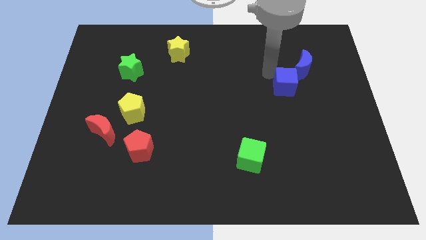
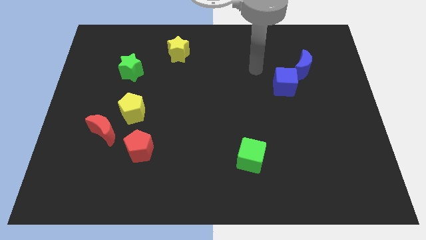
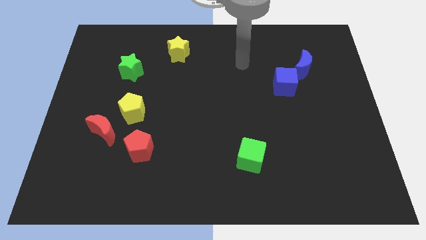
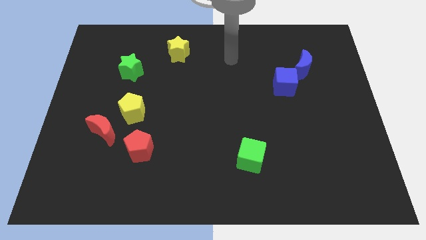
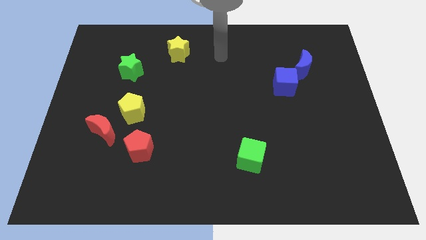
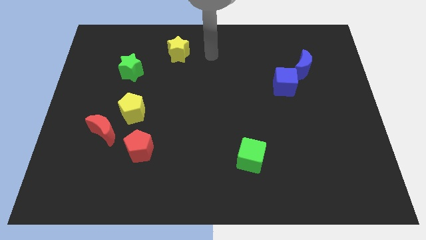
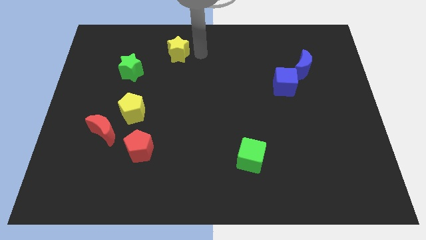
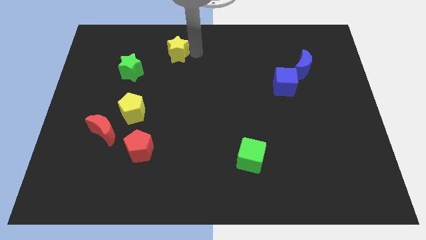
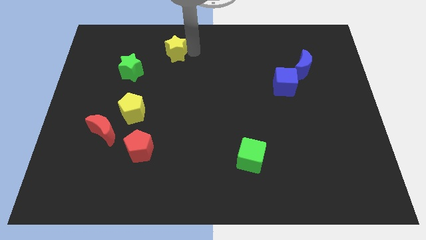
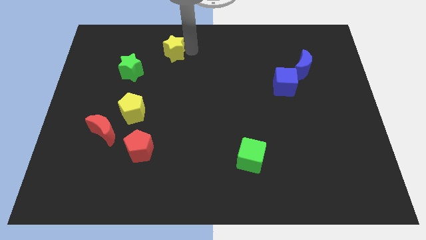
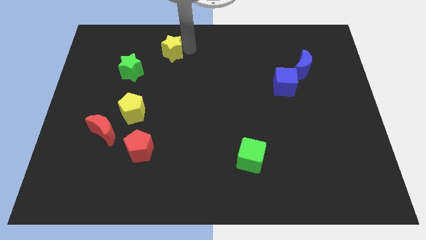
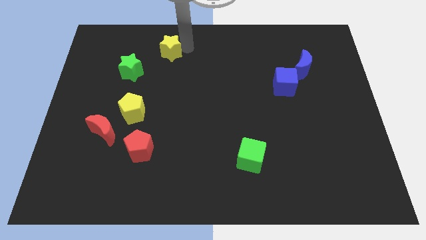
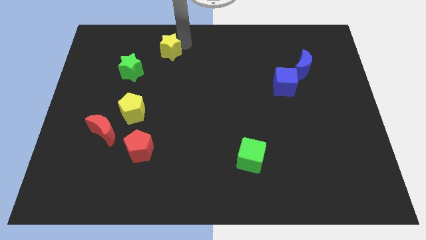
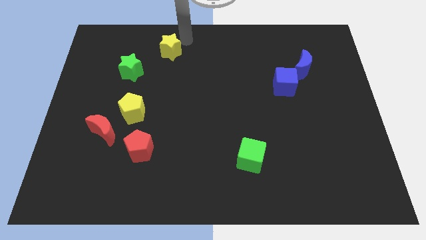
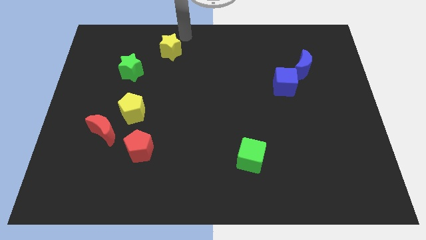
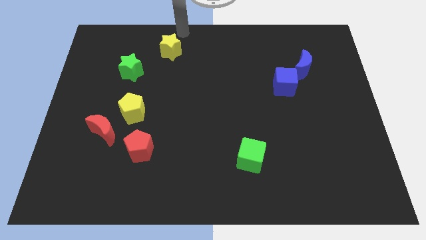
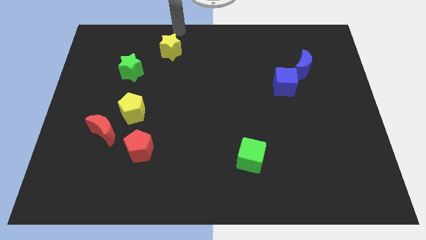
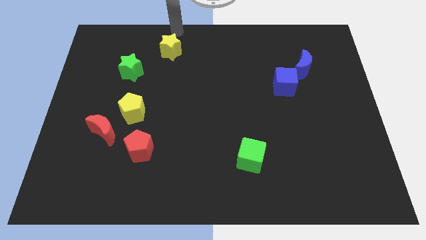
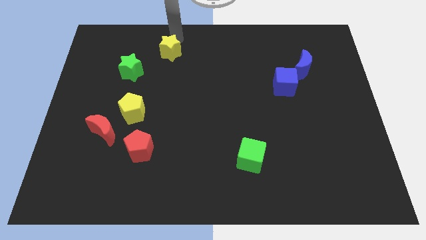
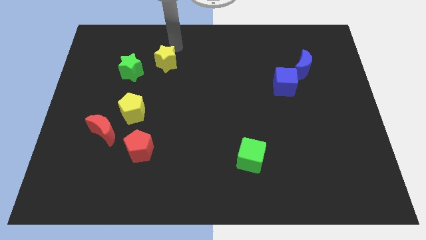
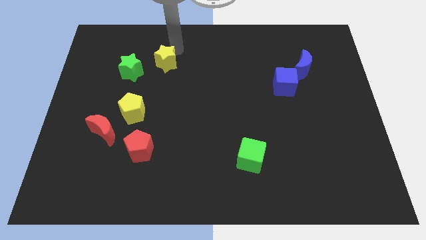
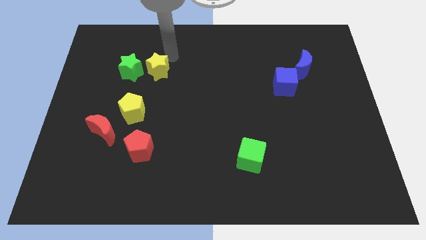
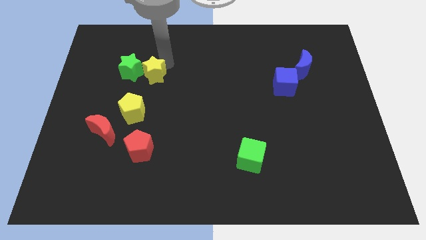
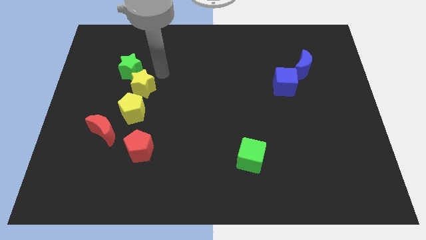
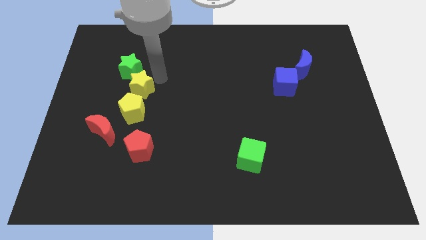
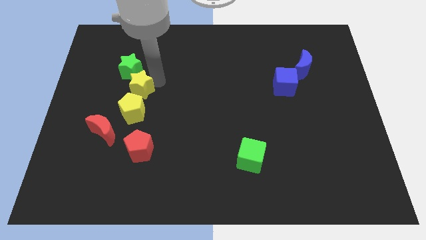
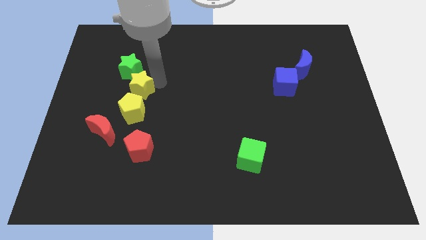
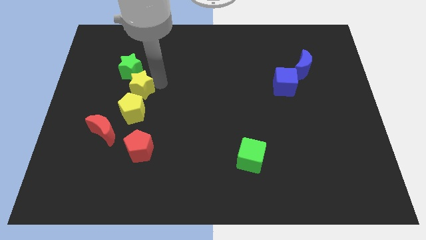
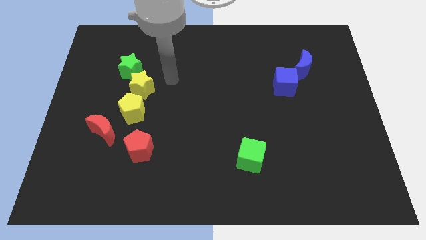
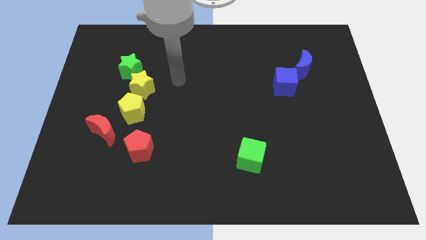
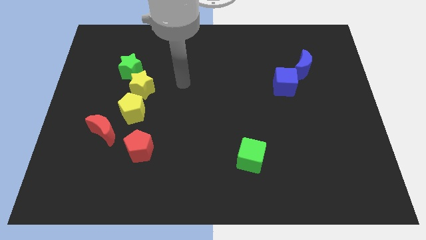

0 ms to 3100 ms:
place the yellow star close to the green star and yellow pentagon

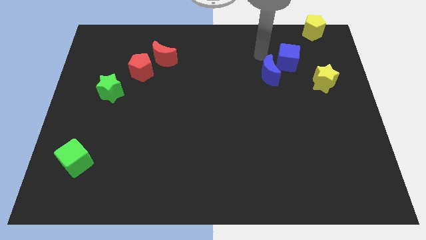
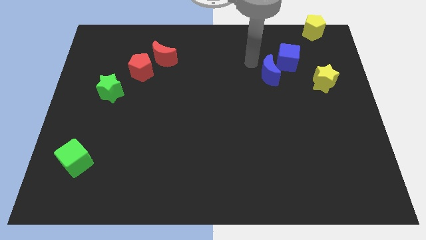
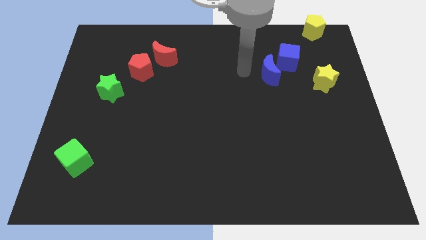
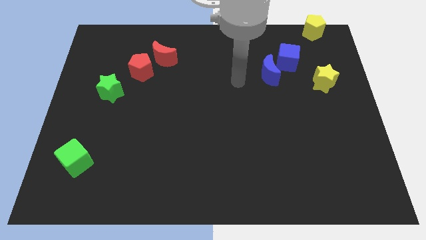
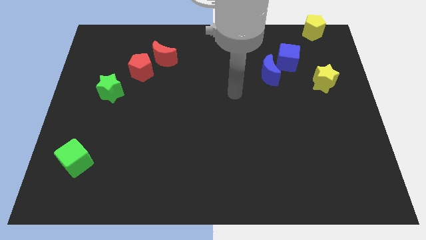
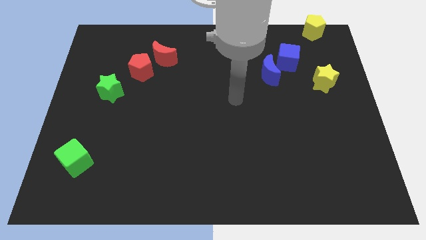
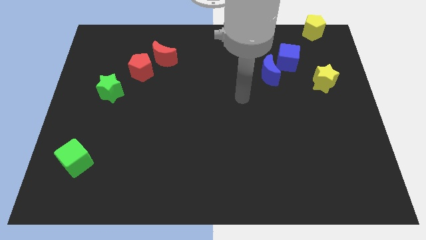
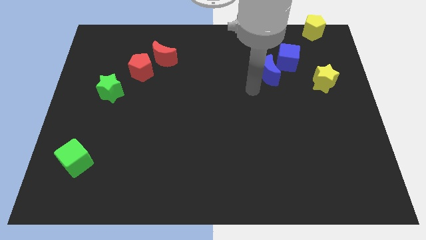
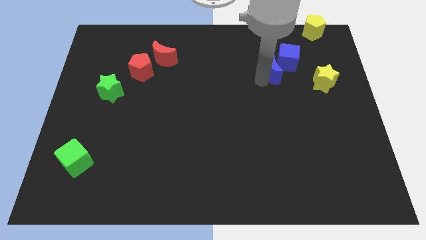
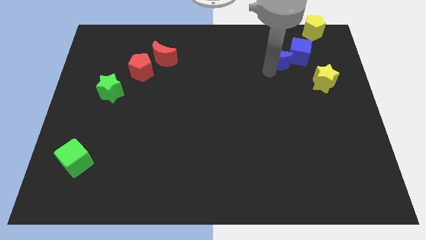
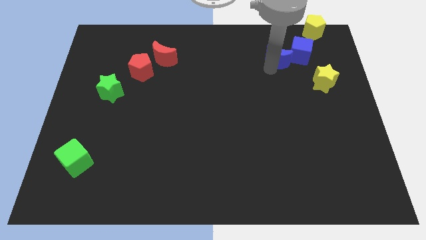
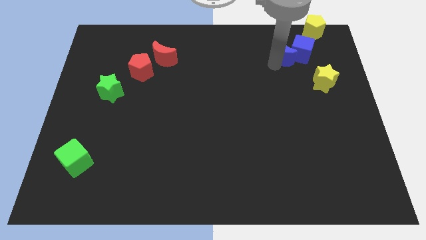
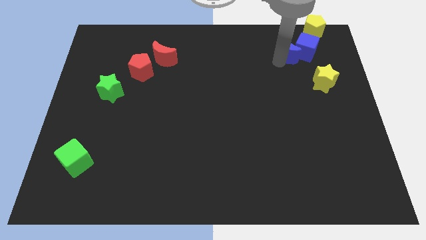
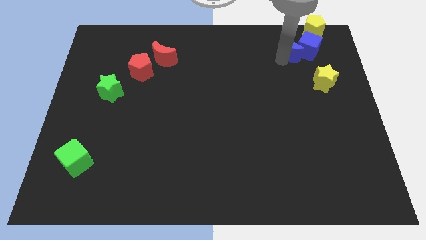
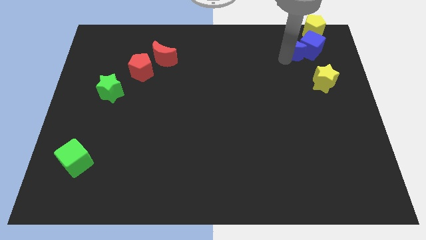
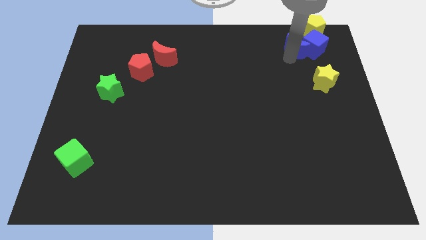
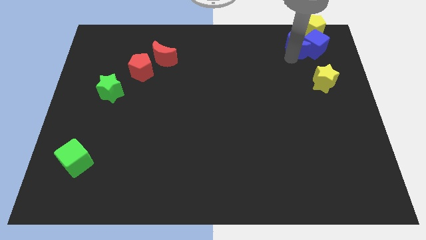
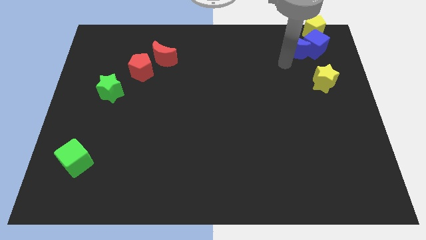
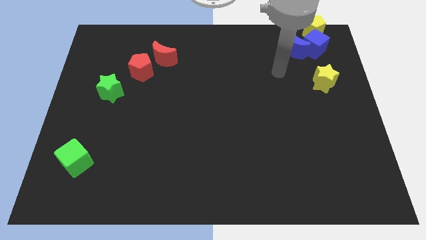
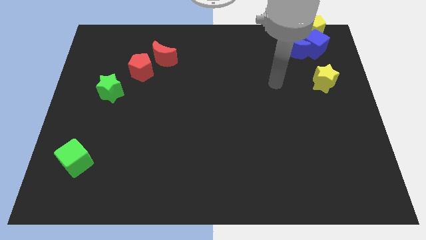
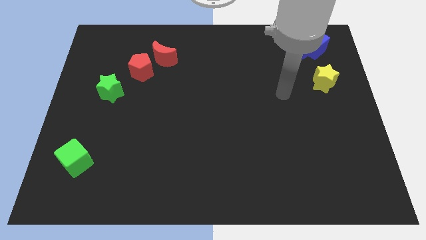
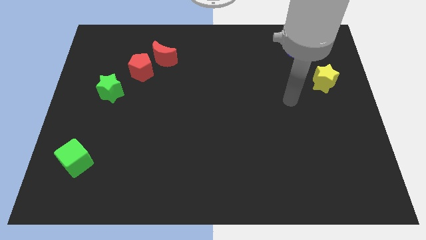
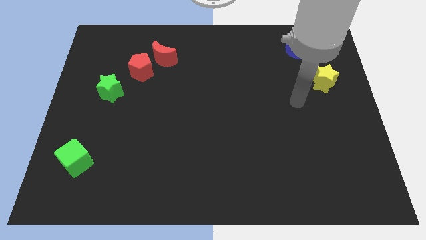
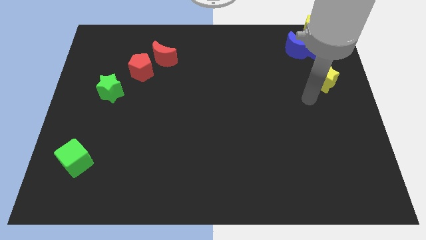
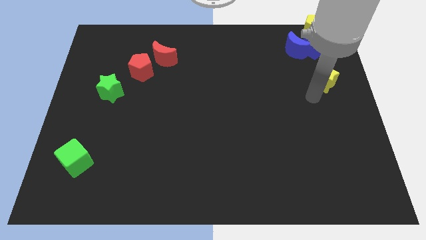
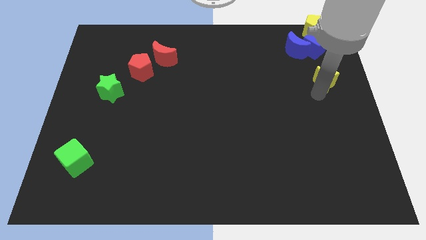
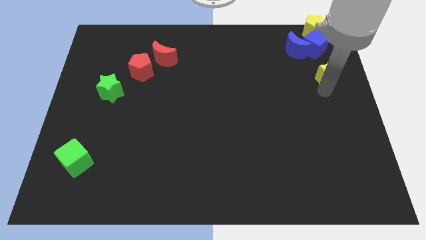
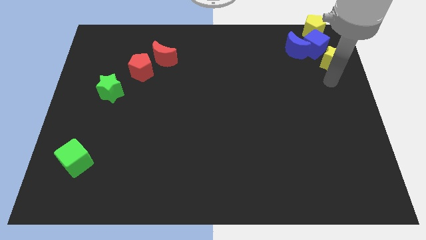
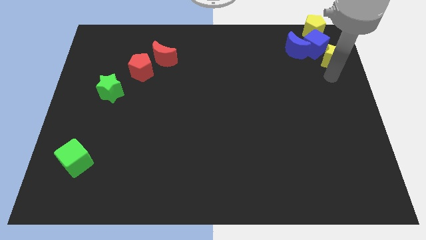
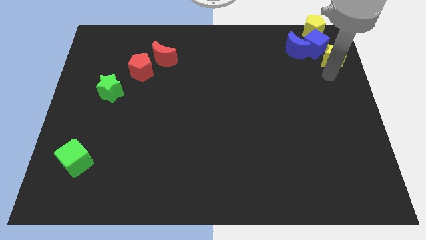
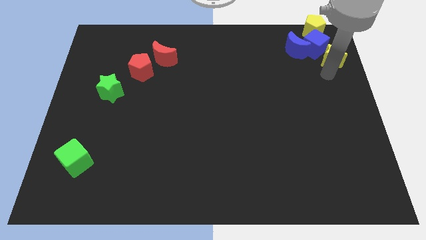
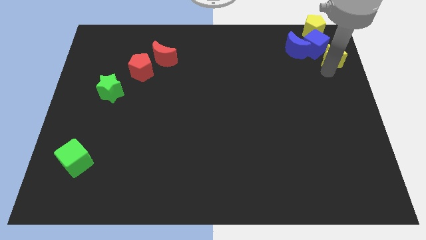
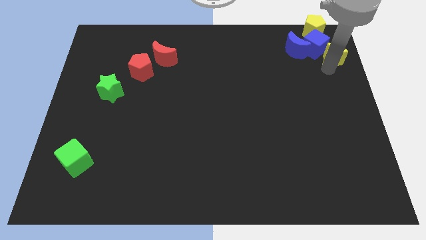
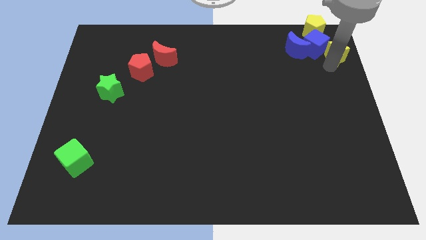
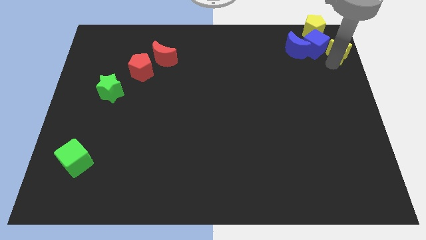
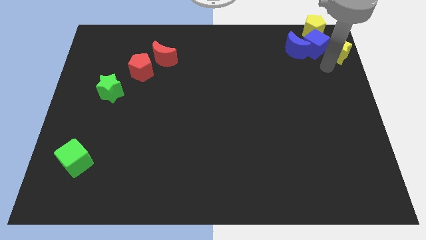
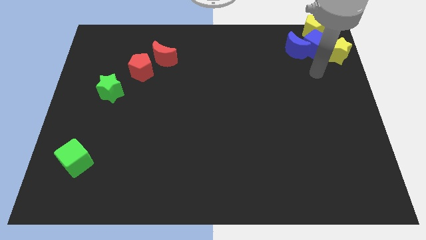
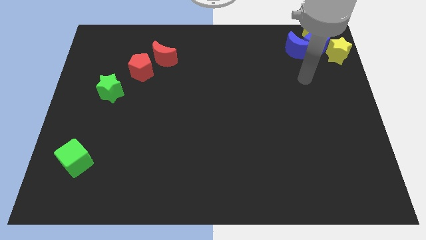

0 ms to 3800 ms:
push blue blocks and yellow star at top right corner

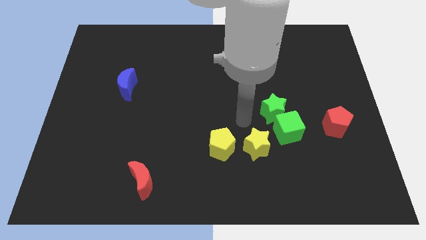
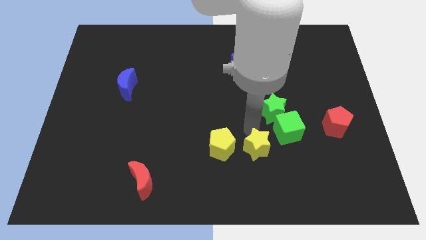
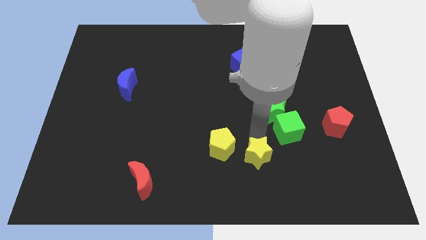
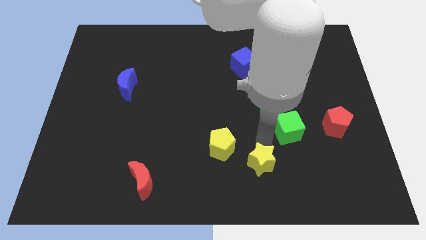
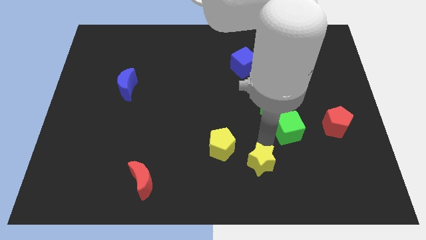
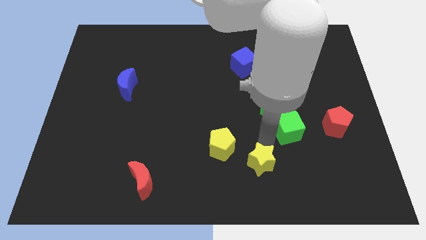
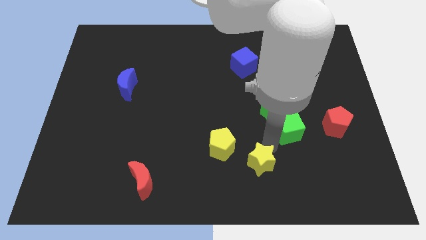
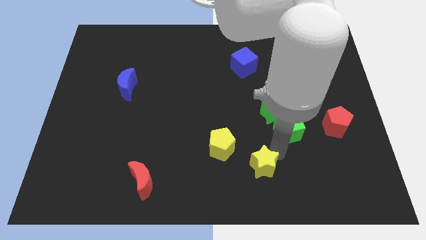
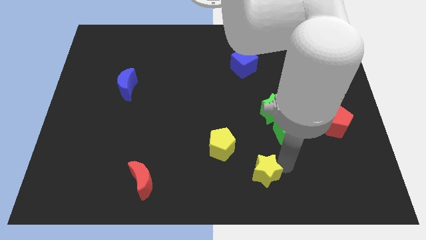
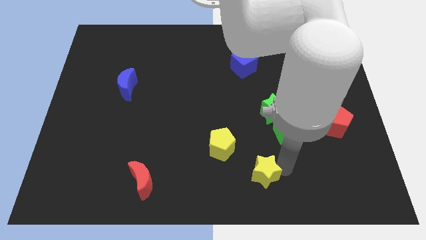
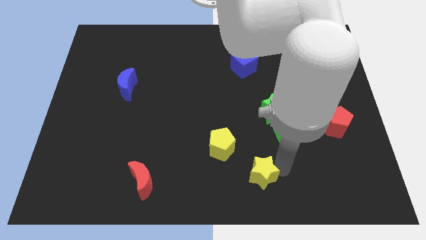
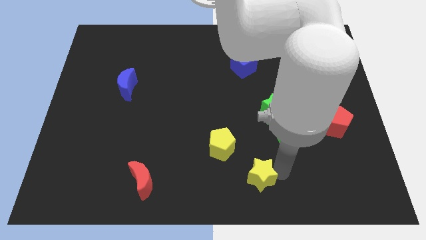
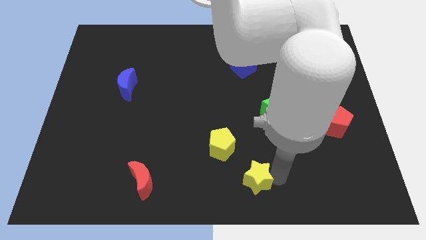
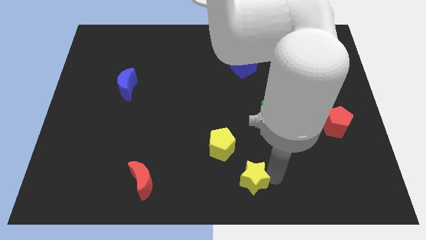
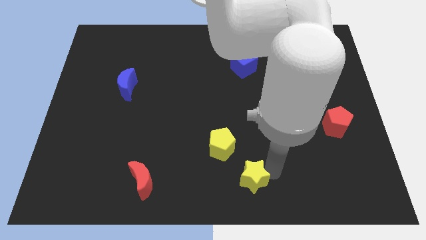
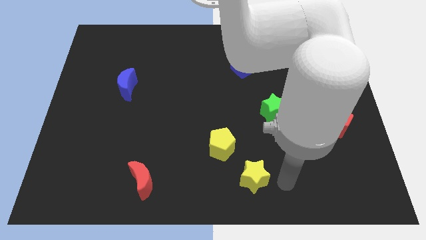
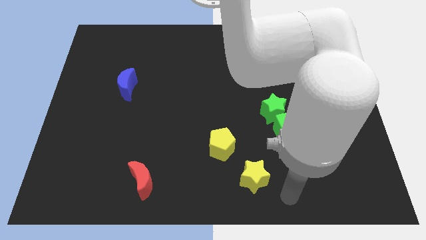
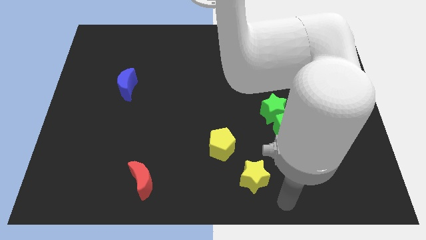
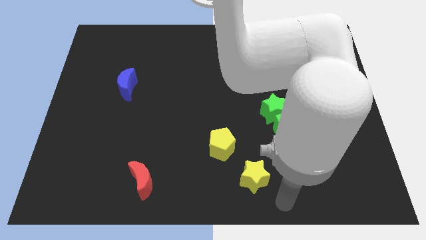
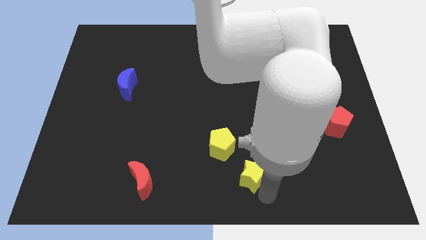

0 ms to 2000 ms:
drag yellow star diagonally to the yellow pentagon

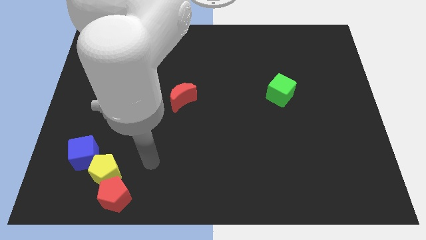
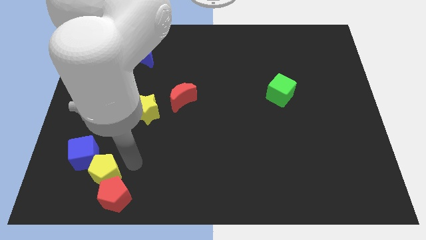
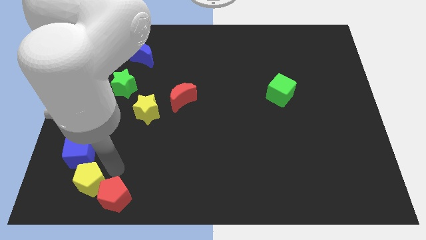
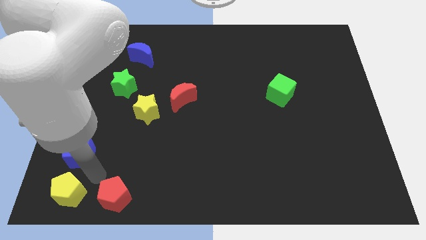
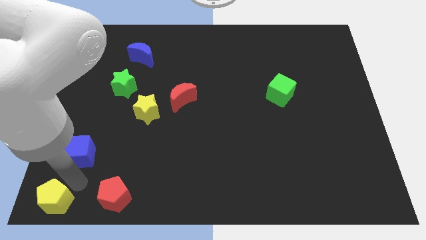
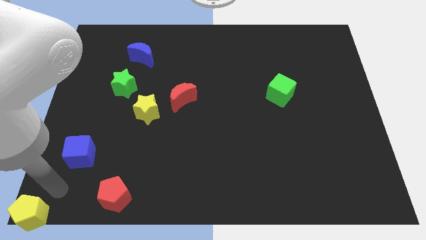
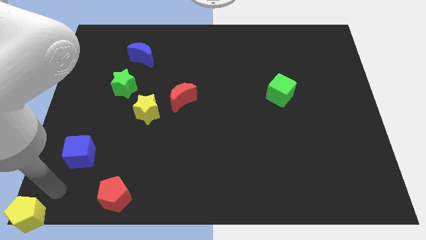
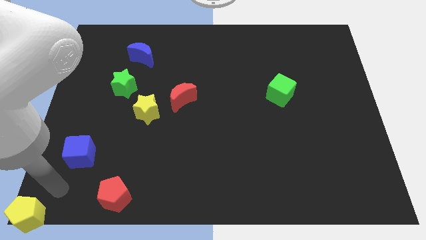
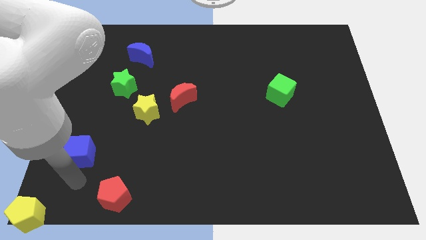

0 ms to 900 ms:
separate the yellow pentagon towards the bottom left corner
